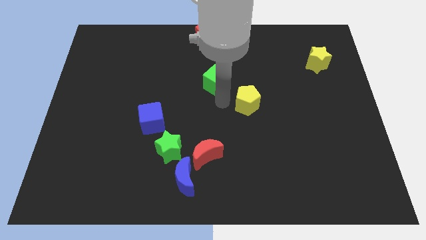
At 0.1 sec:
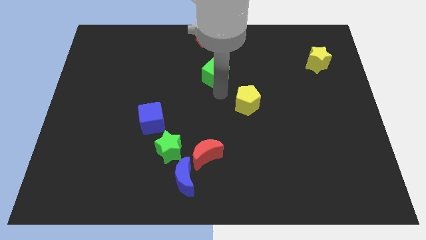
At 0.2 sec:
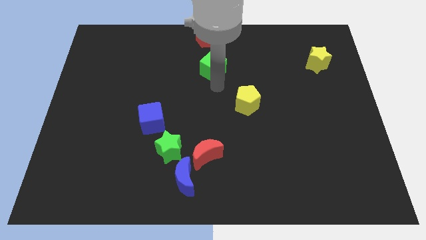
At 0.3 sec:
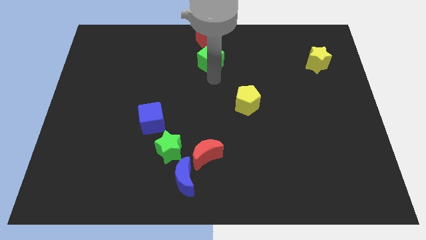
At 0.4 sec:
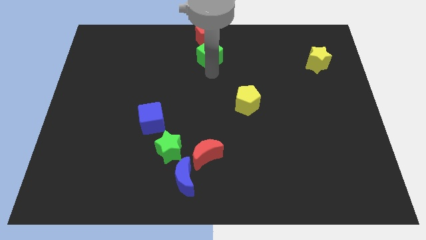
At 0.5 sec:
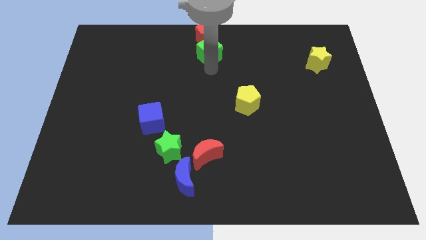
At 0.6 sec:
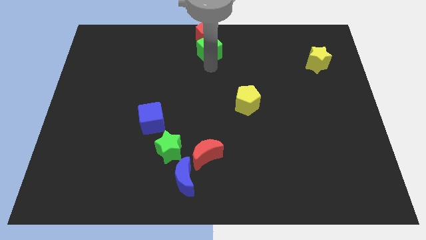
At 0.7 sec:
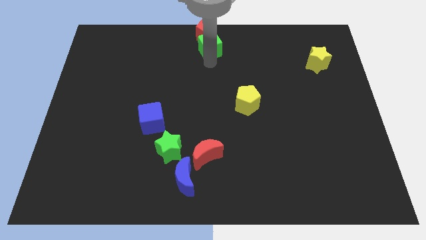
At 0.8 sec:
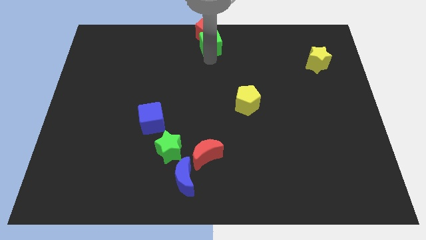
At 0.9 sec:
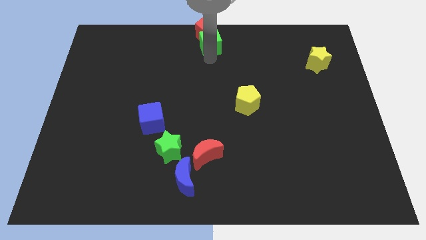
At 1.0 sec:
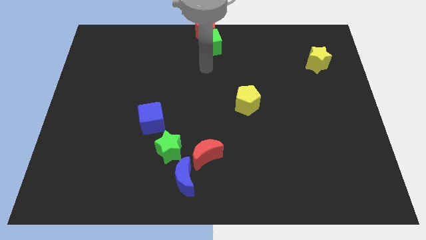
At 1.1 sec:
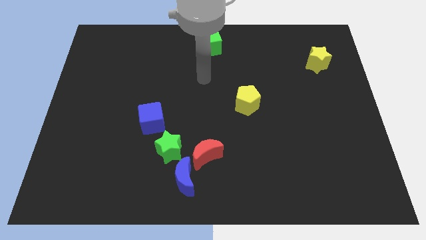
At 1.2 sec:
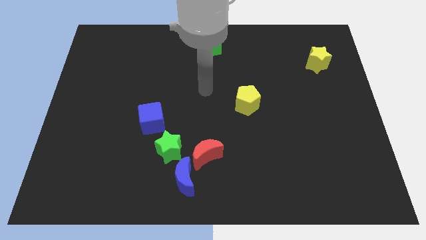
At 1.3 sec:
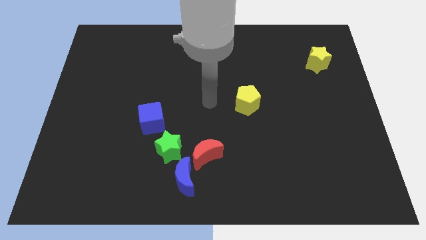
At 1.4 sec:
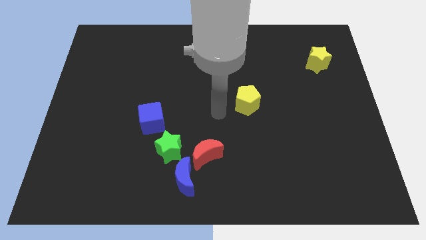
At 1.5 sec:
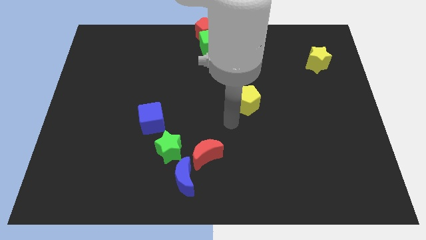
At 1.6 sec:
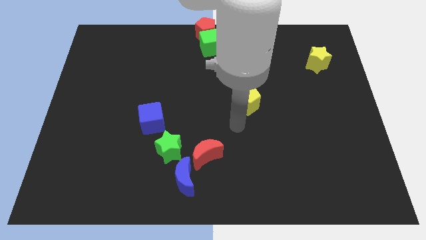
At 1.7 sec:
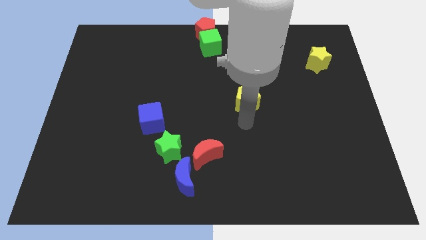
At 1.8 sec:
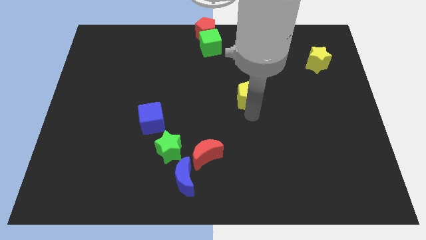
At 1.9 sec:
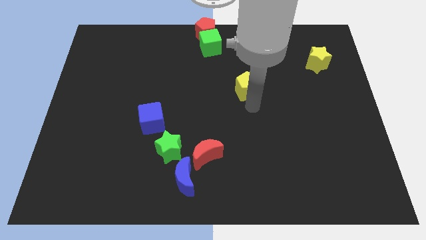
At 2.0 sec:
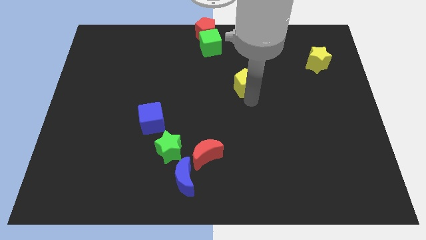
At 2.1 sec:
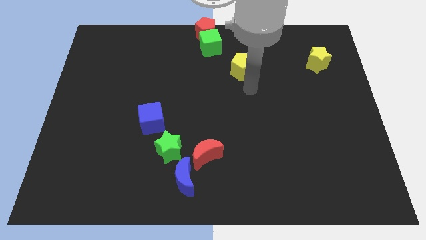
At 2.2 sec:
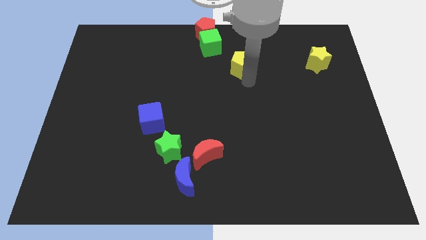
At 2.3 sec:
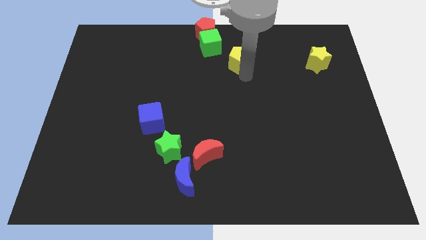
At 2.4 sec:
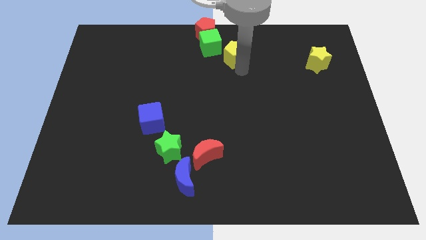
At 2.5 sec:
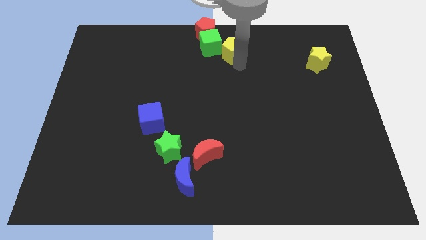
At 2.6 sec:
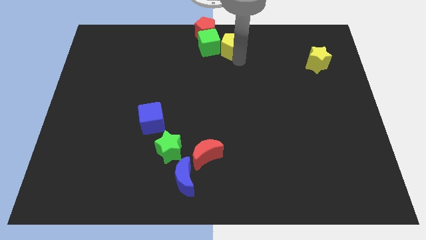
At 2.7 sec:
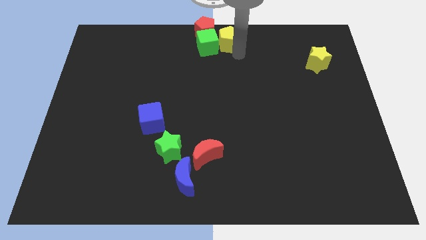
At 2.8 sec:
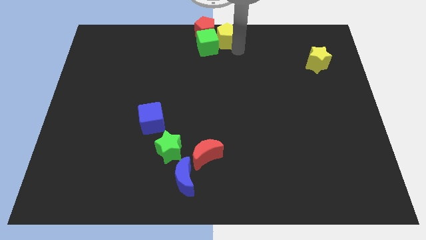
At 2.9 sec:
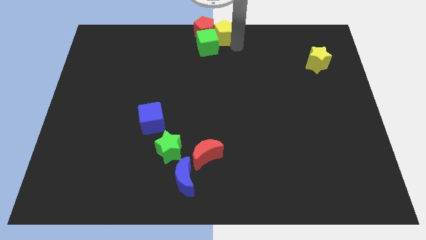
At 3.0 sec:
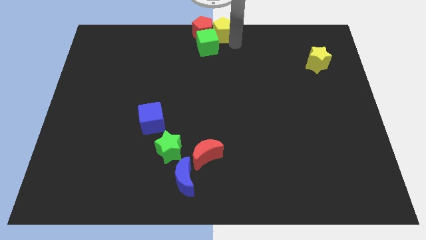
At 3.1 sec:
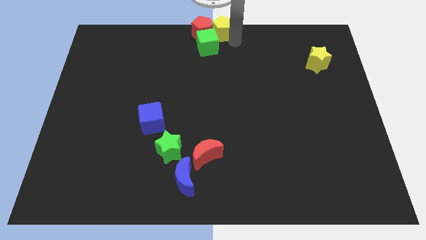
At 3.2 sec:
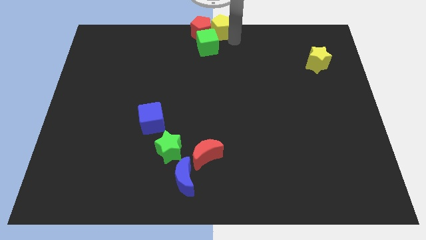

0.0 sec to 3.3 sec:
push green cube and yellow pentagon towards red pentagon

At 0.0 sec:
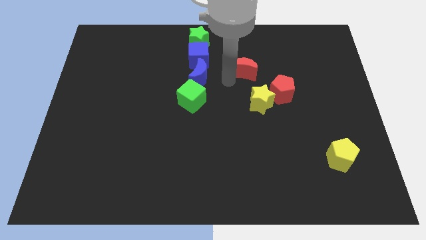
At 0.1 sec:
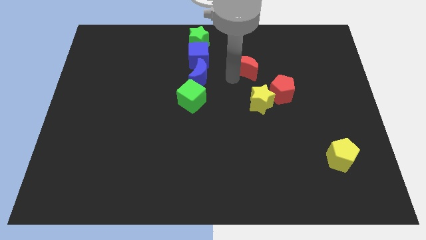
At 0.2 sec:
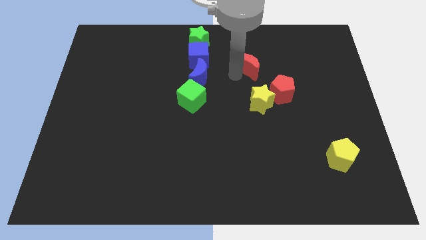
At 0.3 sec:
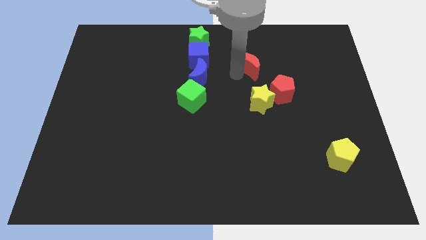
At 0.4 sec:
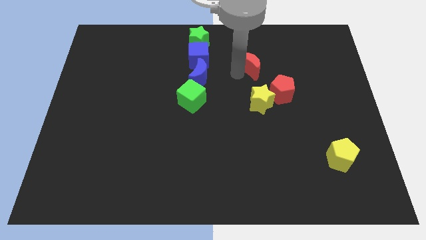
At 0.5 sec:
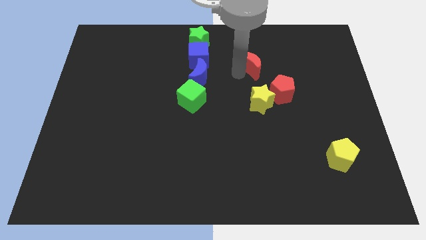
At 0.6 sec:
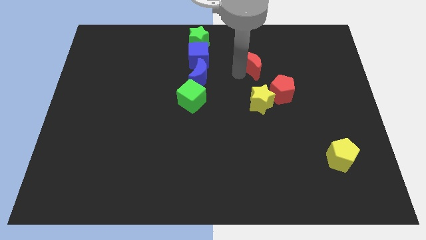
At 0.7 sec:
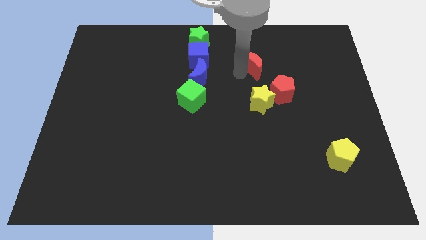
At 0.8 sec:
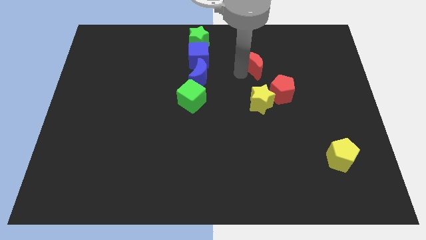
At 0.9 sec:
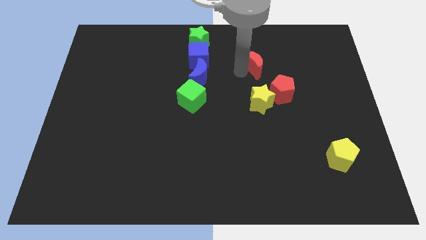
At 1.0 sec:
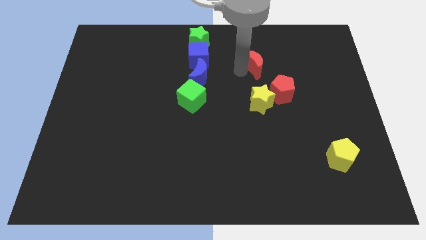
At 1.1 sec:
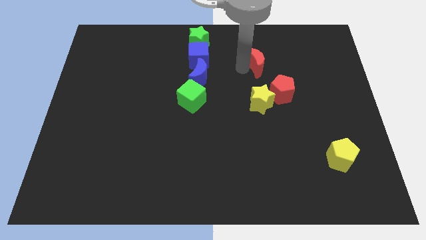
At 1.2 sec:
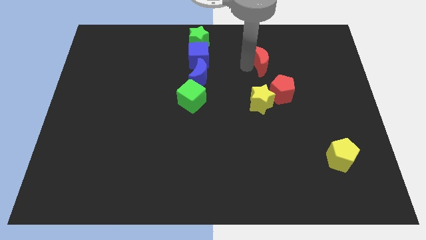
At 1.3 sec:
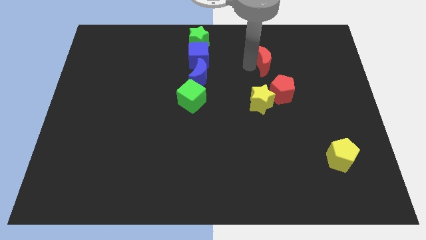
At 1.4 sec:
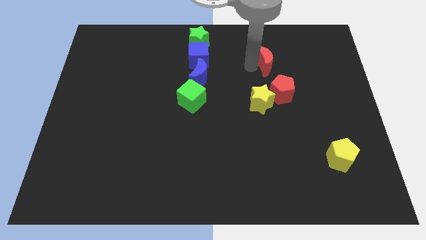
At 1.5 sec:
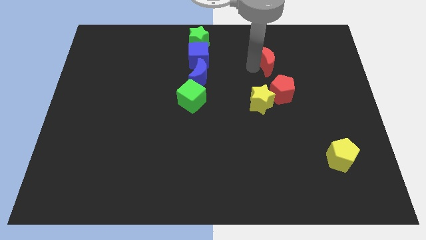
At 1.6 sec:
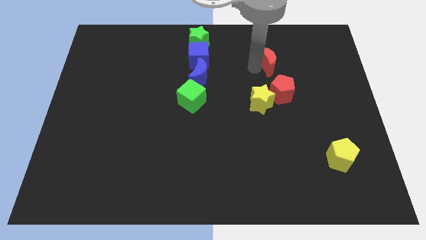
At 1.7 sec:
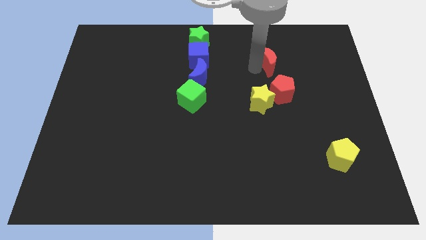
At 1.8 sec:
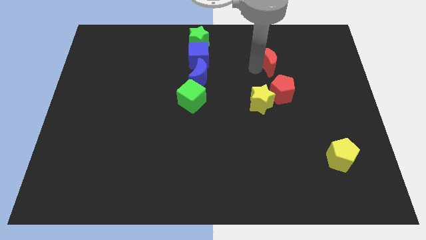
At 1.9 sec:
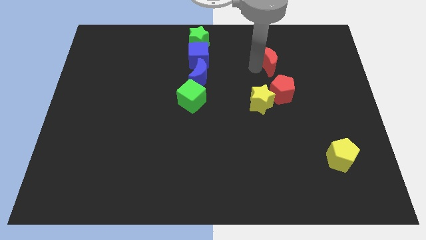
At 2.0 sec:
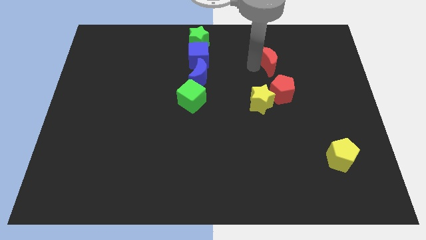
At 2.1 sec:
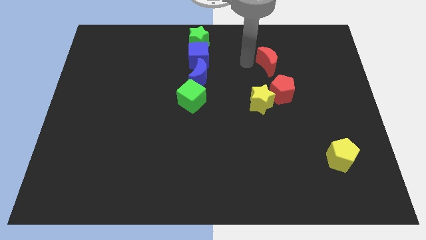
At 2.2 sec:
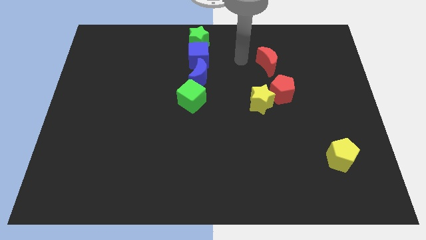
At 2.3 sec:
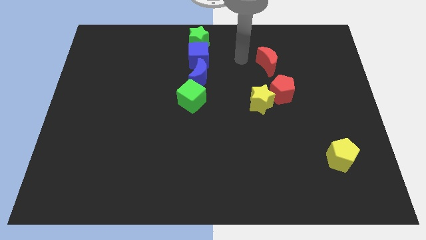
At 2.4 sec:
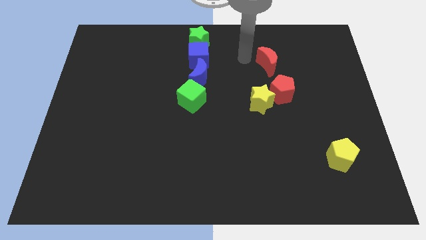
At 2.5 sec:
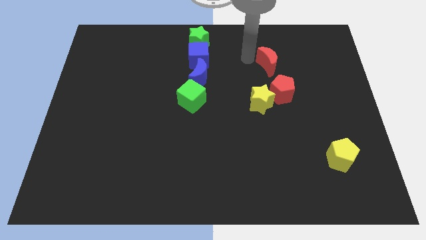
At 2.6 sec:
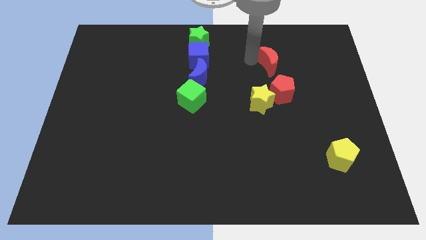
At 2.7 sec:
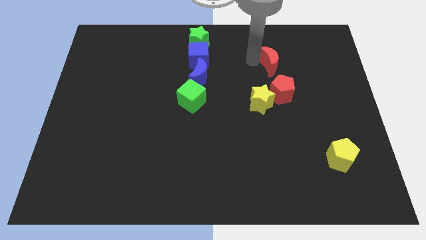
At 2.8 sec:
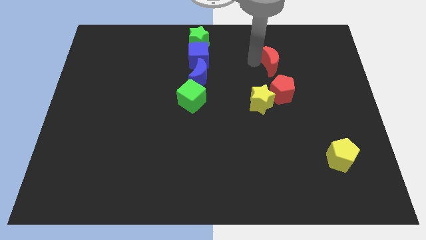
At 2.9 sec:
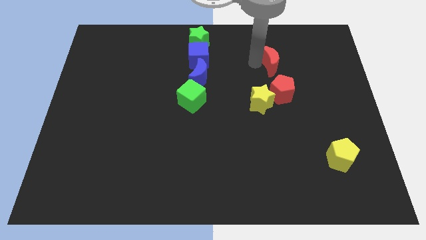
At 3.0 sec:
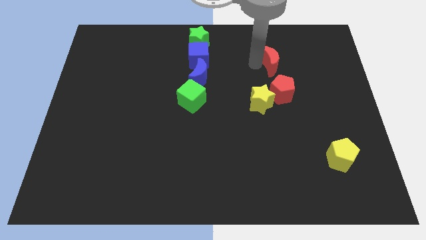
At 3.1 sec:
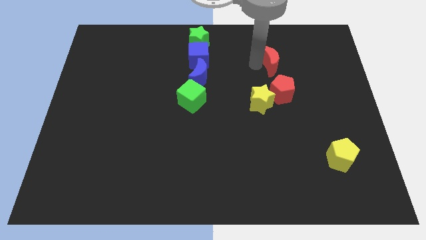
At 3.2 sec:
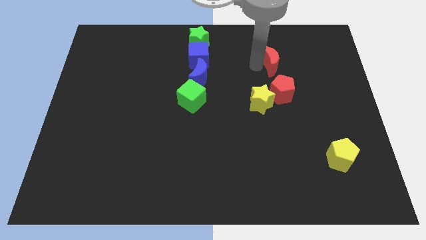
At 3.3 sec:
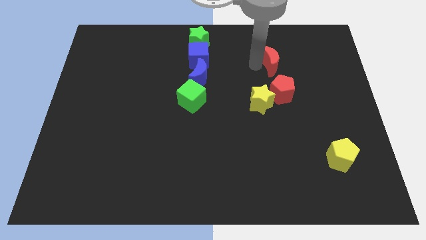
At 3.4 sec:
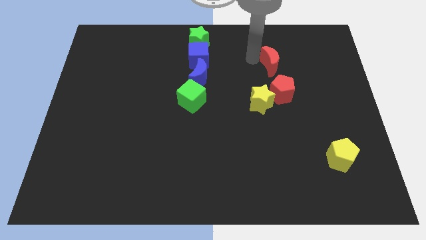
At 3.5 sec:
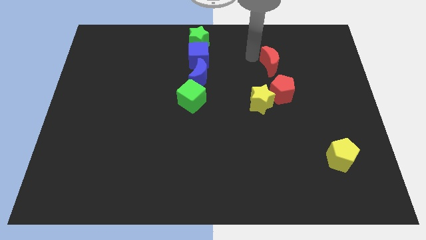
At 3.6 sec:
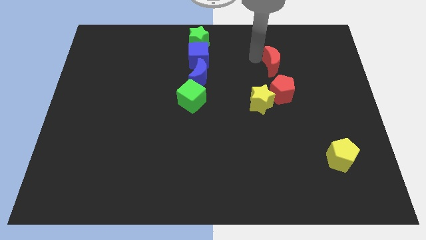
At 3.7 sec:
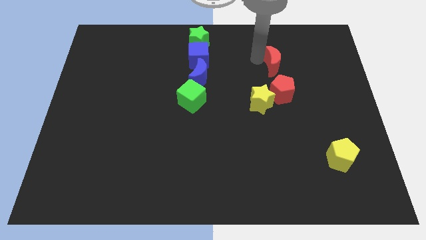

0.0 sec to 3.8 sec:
move red crescent above red pentagon

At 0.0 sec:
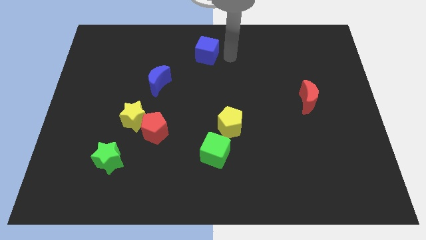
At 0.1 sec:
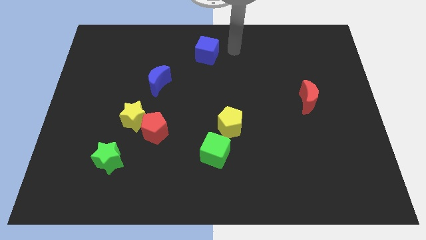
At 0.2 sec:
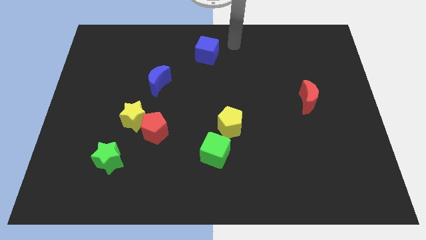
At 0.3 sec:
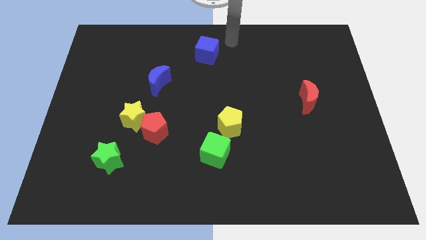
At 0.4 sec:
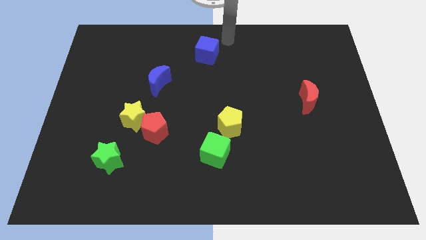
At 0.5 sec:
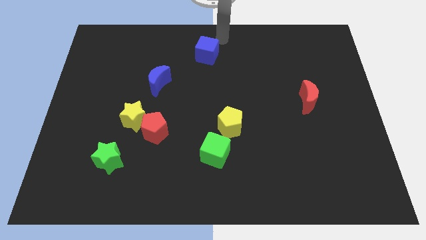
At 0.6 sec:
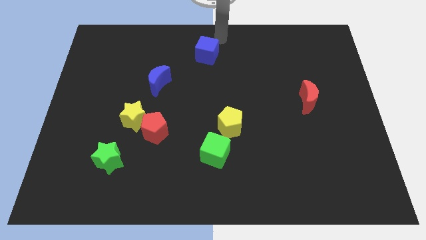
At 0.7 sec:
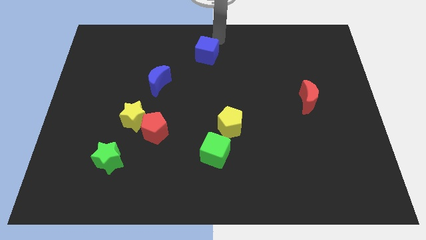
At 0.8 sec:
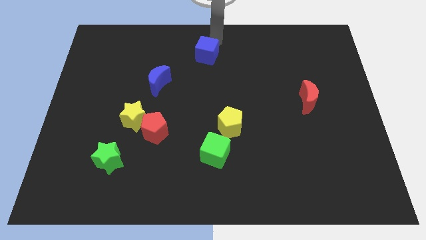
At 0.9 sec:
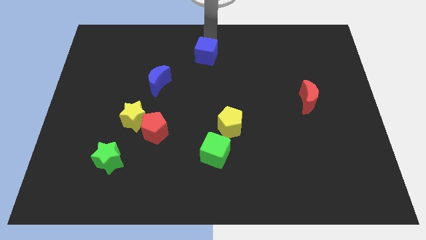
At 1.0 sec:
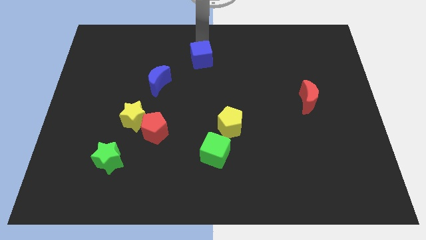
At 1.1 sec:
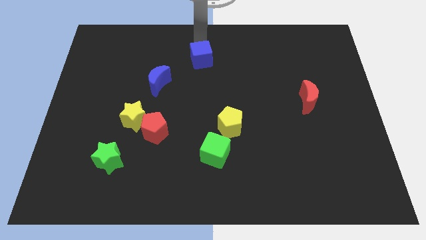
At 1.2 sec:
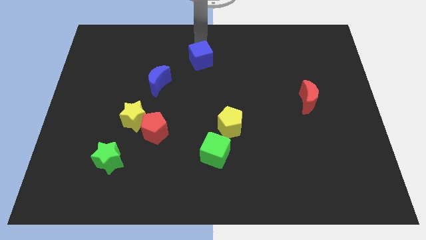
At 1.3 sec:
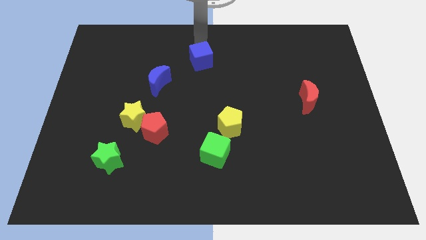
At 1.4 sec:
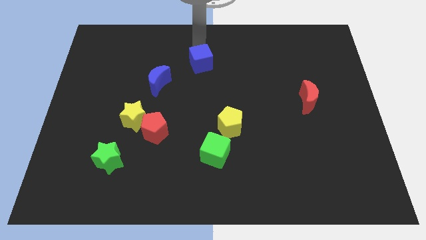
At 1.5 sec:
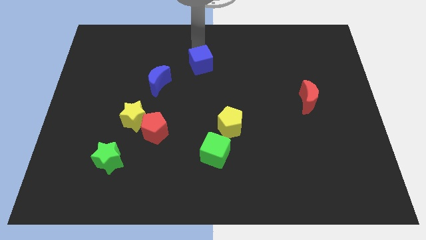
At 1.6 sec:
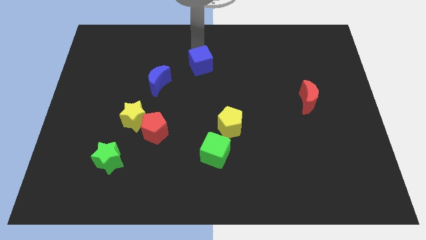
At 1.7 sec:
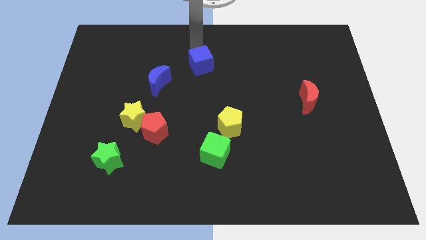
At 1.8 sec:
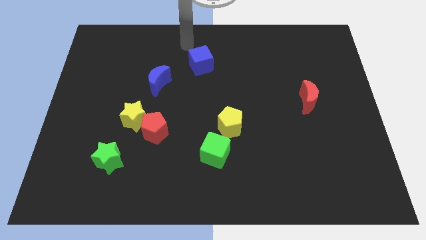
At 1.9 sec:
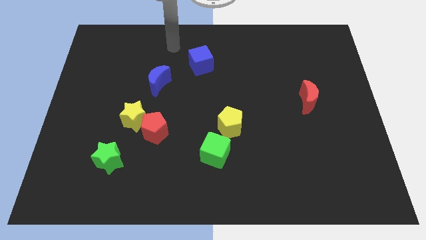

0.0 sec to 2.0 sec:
place blue cube to the top right of blue moon
